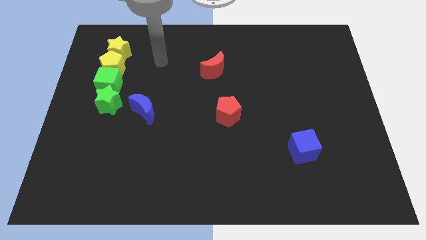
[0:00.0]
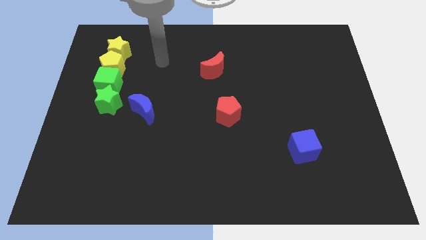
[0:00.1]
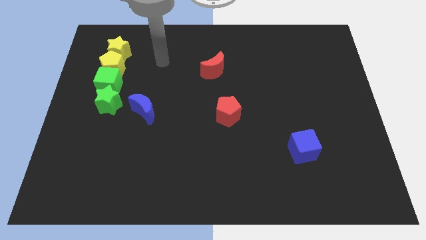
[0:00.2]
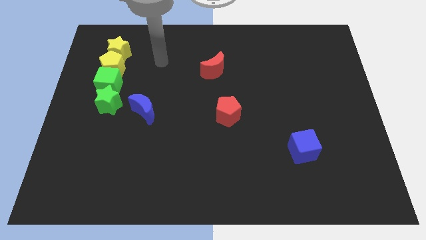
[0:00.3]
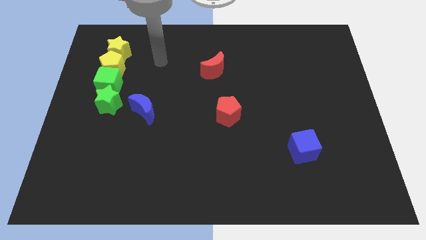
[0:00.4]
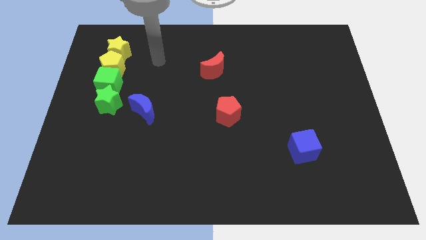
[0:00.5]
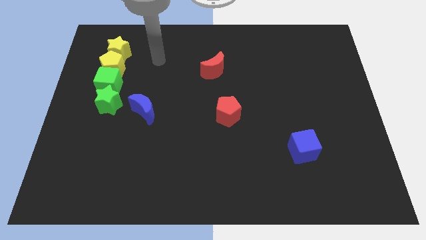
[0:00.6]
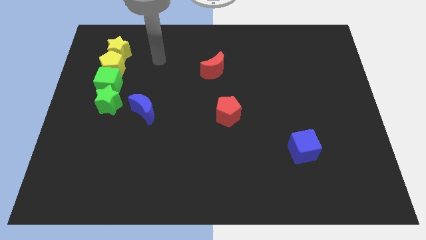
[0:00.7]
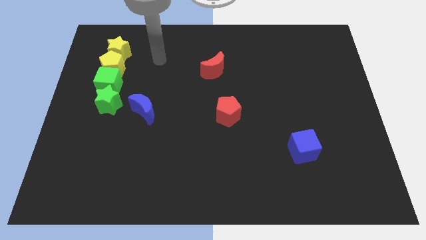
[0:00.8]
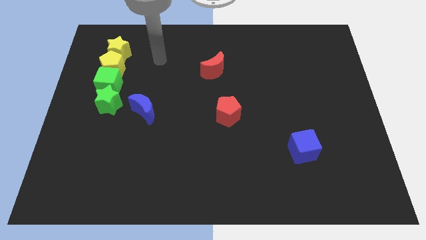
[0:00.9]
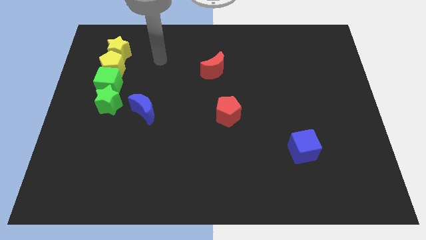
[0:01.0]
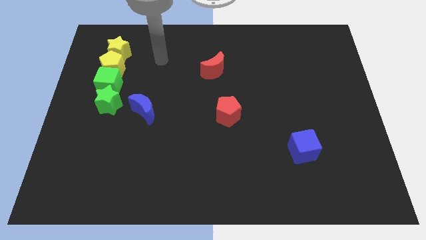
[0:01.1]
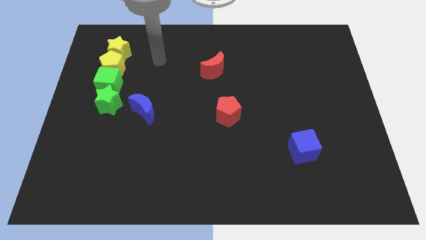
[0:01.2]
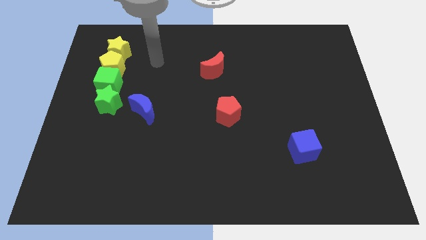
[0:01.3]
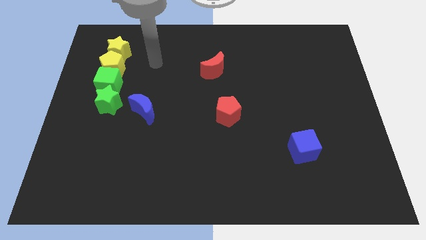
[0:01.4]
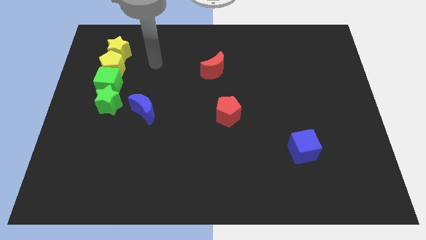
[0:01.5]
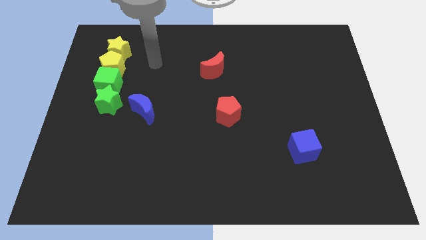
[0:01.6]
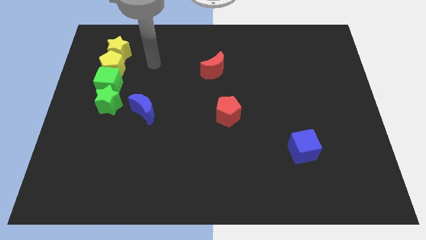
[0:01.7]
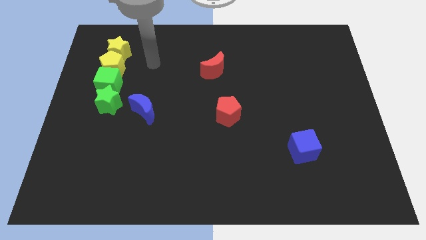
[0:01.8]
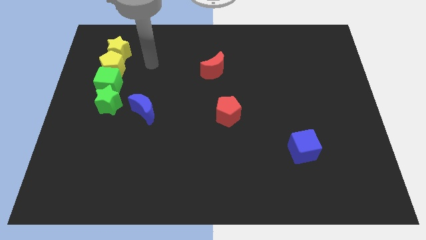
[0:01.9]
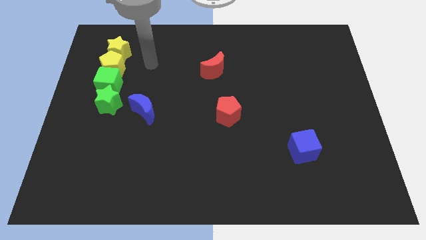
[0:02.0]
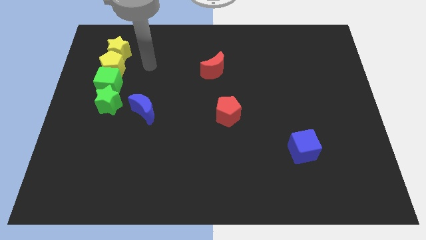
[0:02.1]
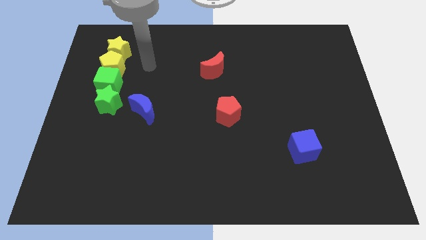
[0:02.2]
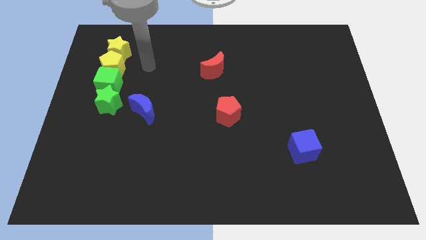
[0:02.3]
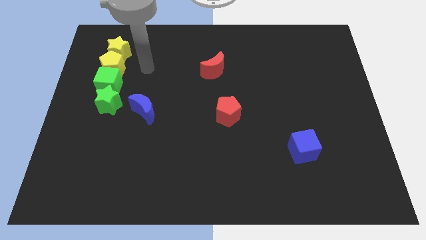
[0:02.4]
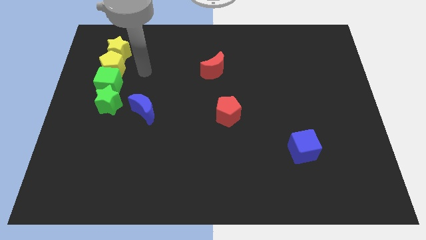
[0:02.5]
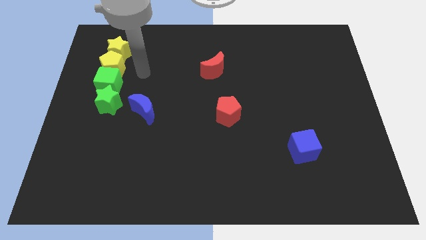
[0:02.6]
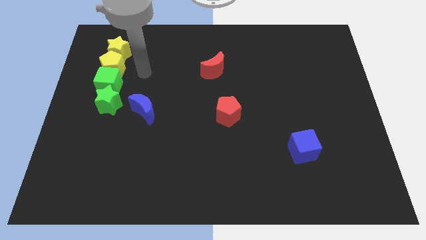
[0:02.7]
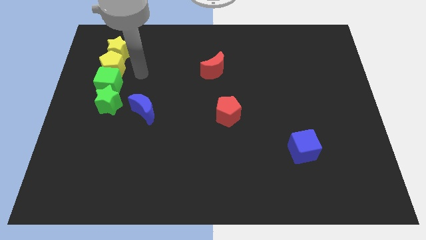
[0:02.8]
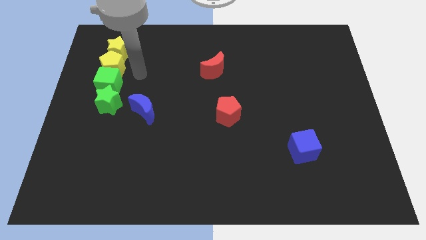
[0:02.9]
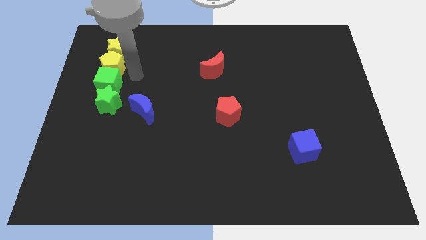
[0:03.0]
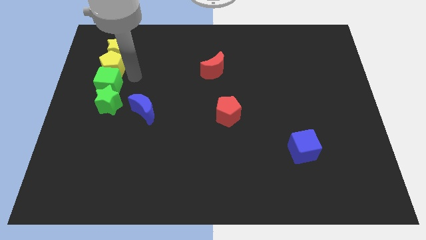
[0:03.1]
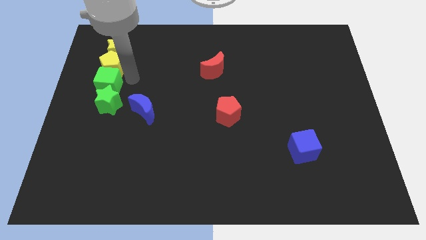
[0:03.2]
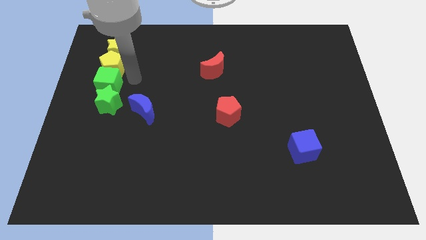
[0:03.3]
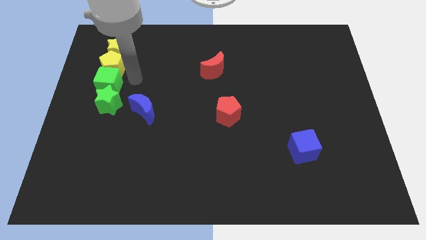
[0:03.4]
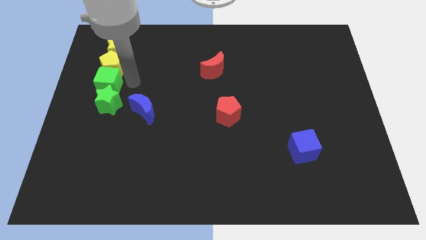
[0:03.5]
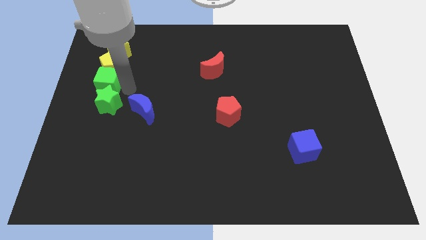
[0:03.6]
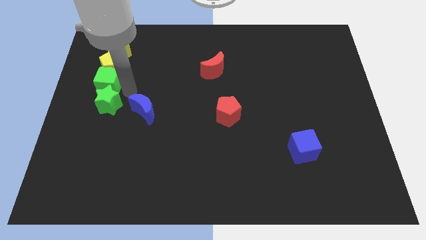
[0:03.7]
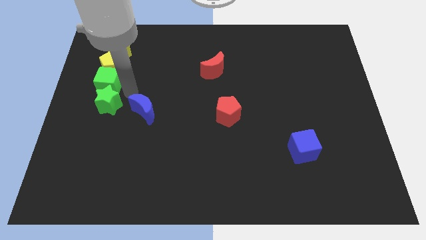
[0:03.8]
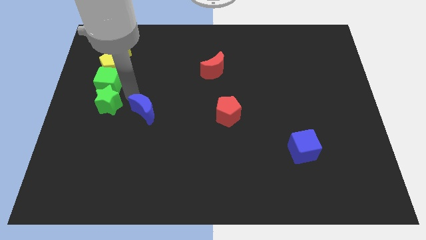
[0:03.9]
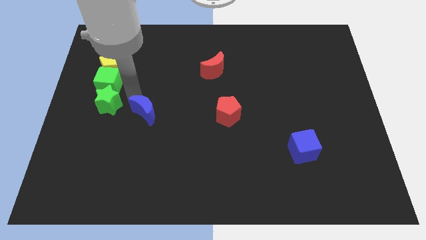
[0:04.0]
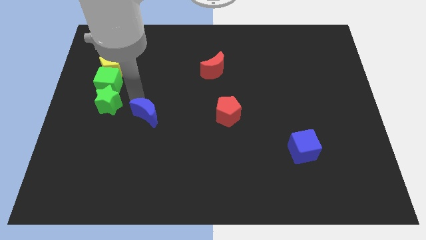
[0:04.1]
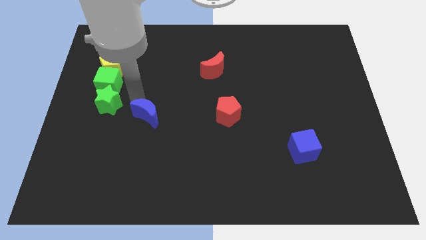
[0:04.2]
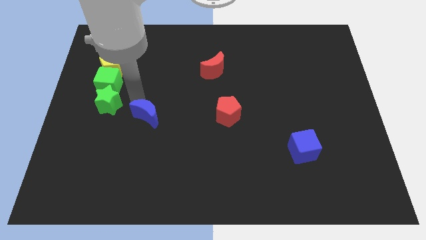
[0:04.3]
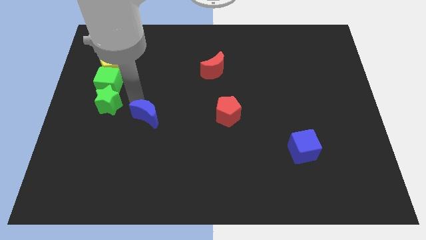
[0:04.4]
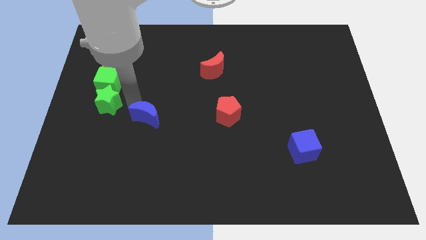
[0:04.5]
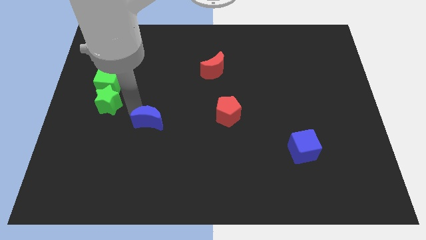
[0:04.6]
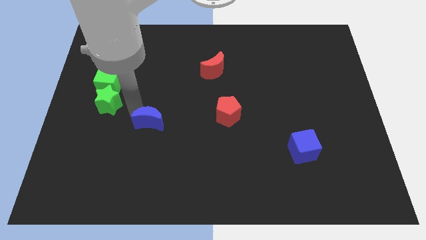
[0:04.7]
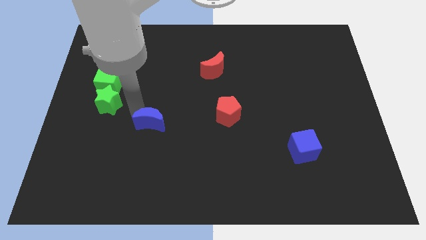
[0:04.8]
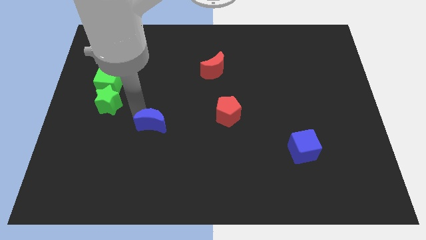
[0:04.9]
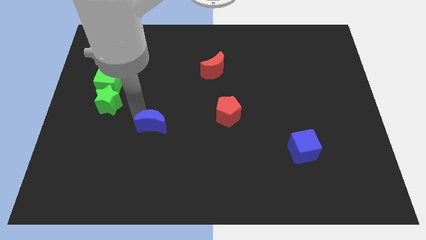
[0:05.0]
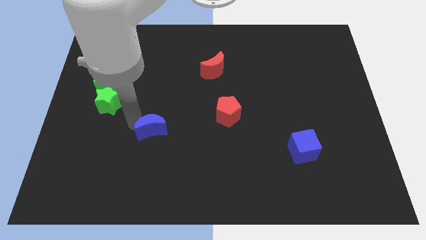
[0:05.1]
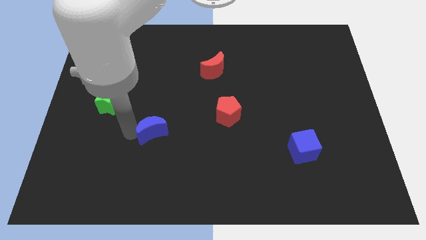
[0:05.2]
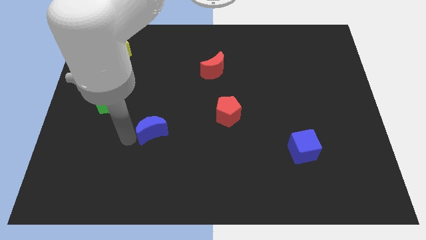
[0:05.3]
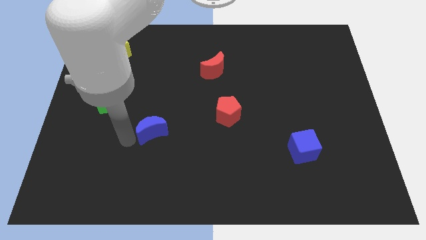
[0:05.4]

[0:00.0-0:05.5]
move the blue moon slightly towards bottom

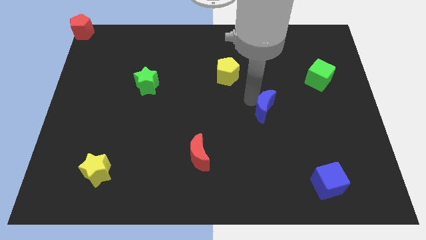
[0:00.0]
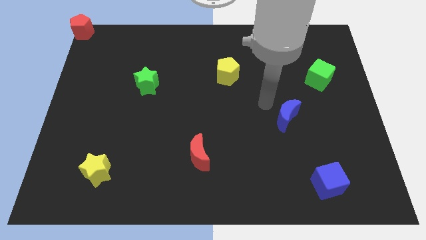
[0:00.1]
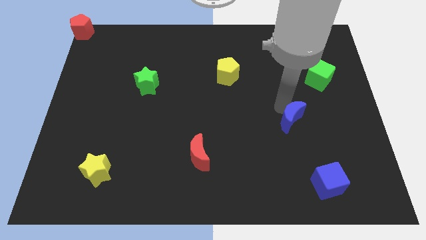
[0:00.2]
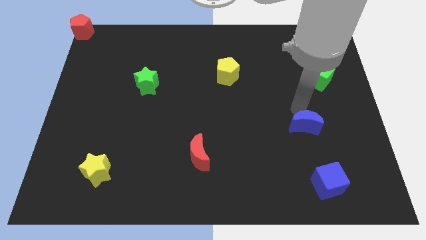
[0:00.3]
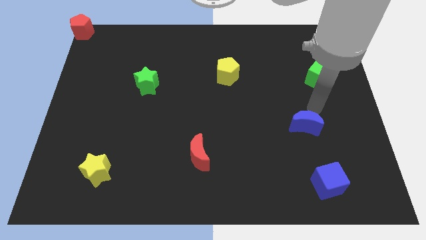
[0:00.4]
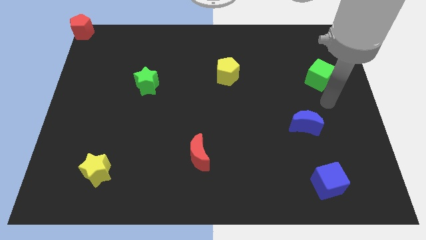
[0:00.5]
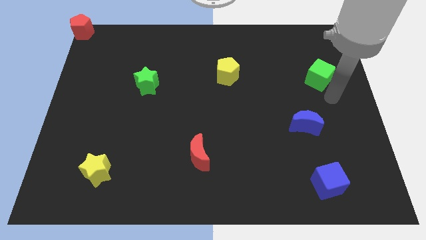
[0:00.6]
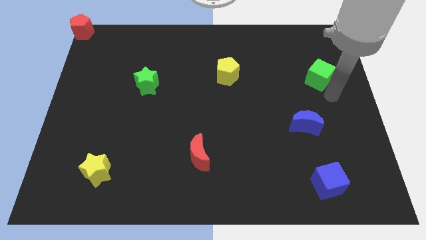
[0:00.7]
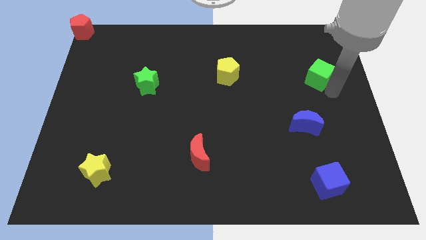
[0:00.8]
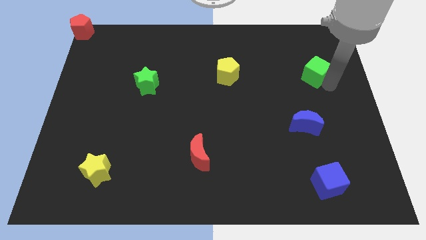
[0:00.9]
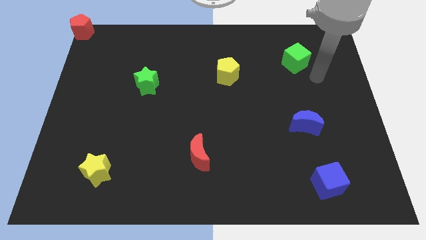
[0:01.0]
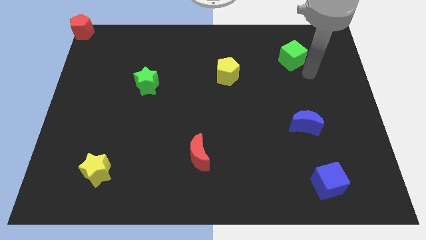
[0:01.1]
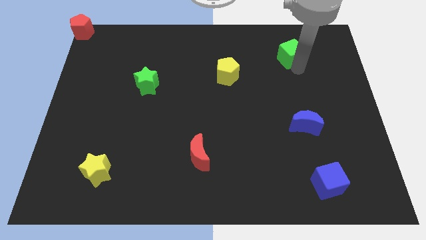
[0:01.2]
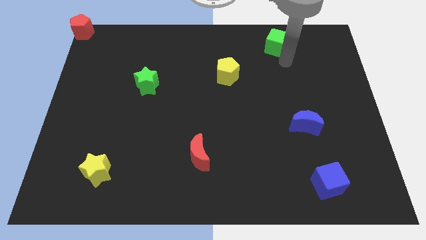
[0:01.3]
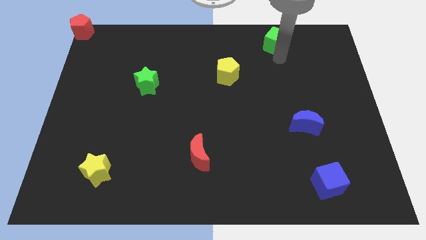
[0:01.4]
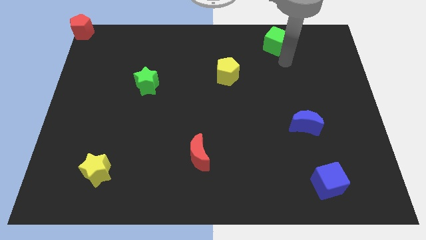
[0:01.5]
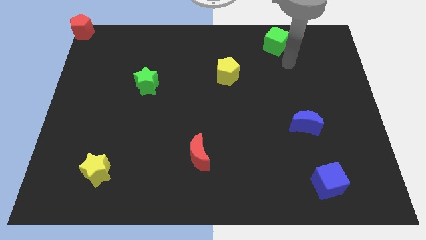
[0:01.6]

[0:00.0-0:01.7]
push blue moon in between green cube and blue cube

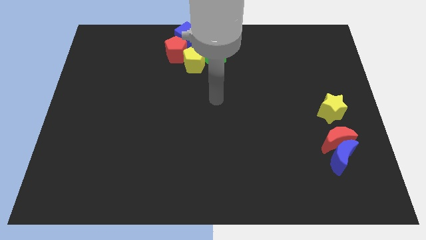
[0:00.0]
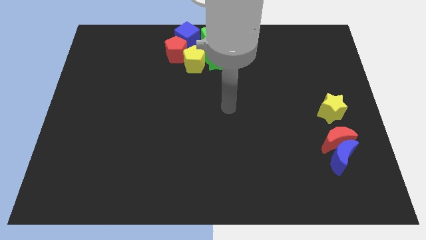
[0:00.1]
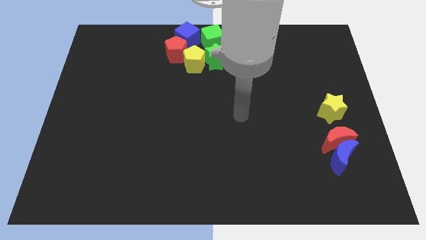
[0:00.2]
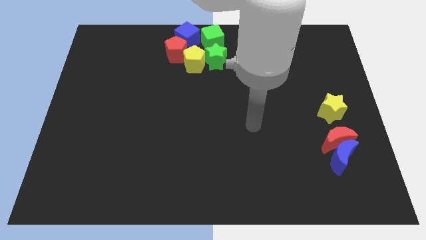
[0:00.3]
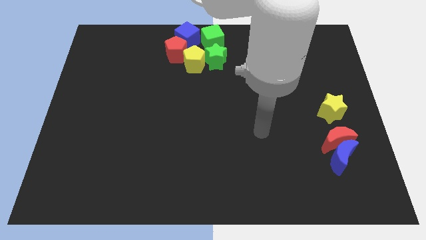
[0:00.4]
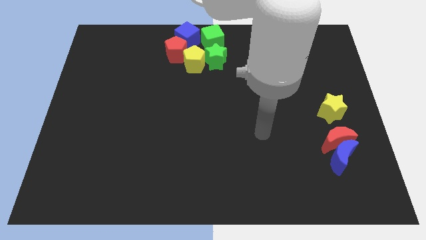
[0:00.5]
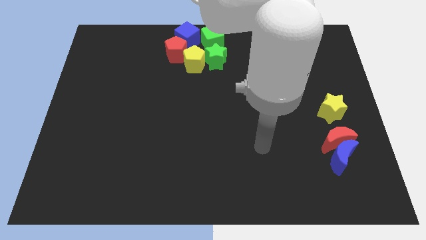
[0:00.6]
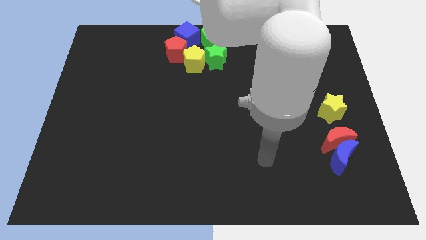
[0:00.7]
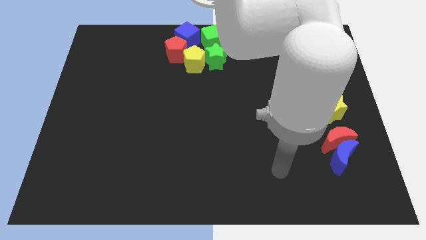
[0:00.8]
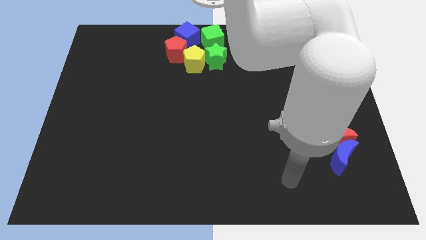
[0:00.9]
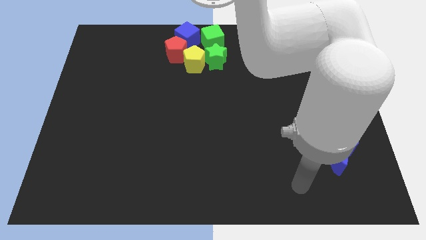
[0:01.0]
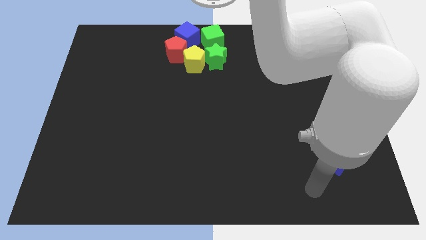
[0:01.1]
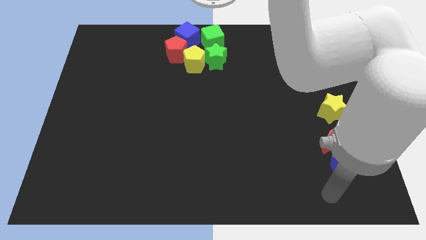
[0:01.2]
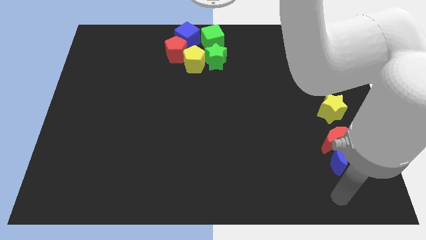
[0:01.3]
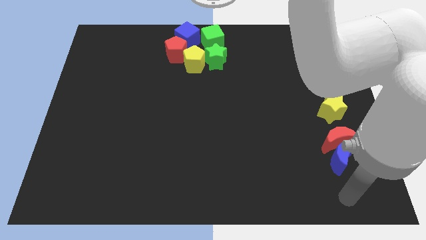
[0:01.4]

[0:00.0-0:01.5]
move your hand towards the bottom of the blue crescent

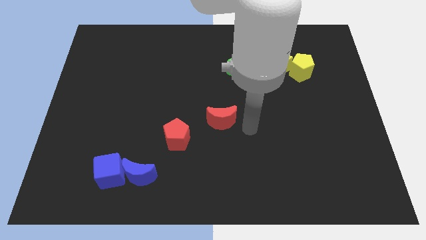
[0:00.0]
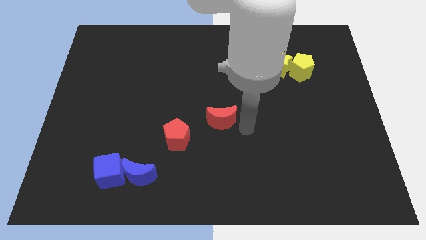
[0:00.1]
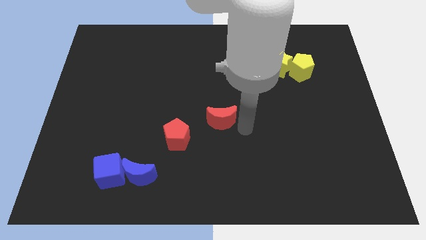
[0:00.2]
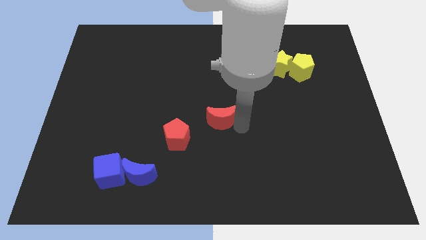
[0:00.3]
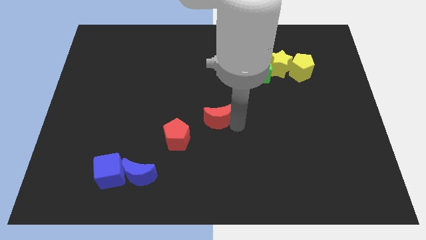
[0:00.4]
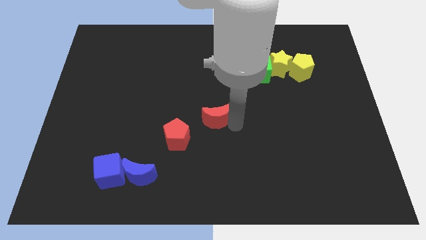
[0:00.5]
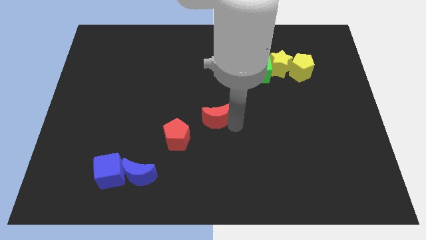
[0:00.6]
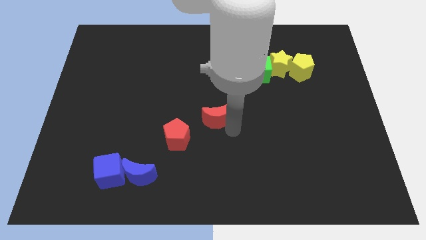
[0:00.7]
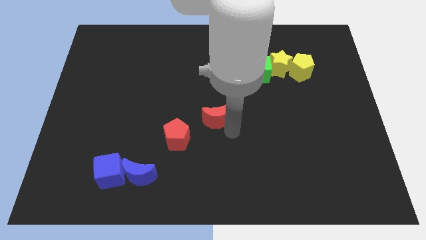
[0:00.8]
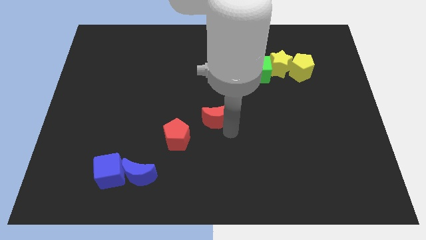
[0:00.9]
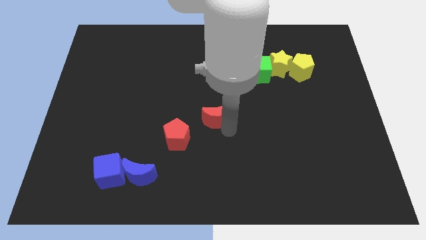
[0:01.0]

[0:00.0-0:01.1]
touch the bottom of red moon
